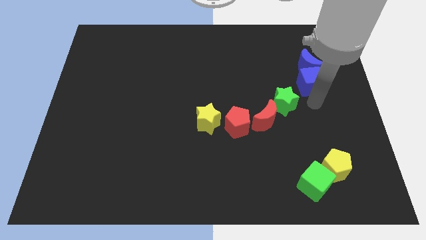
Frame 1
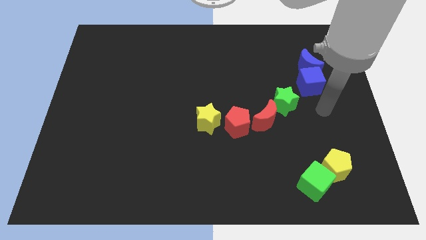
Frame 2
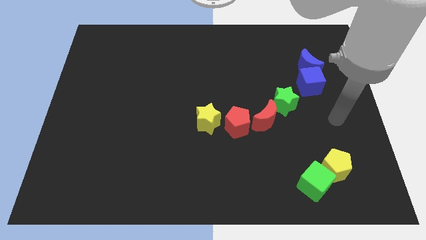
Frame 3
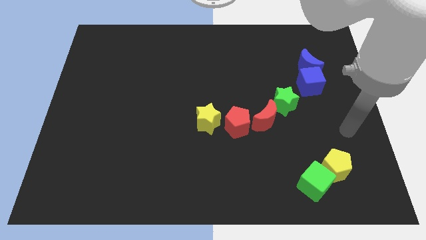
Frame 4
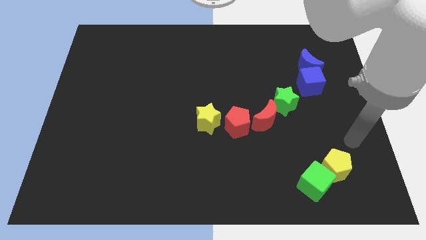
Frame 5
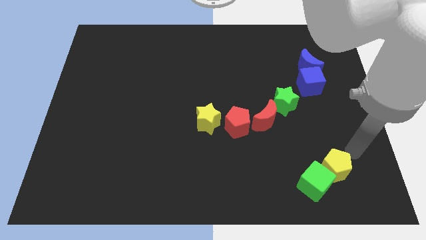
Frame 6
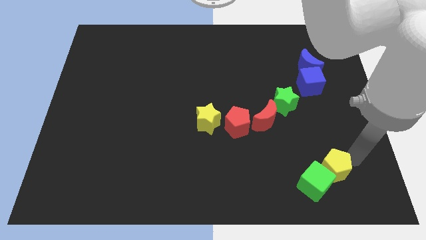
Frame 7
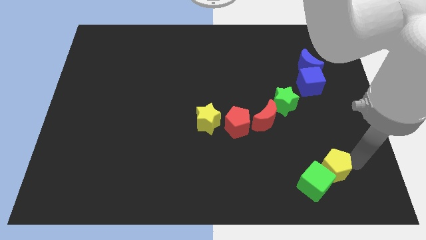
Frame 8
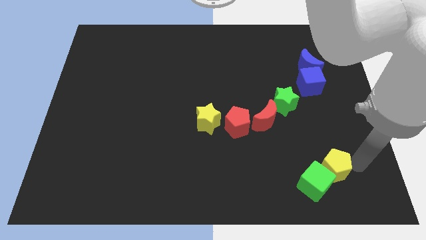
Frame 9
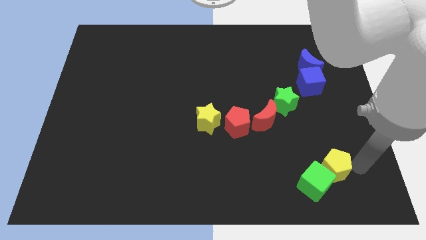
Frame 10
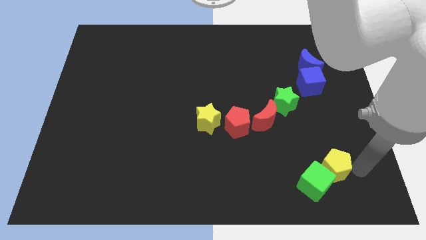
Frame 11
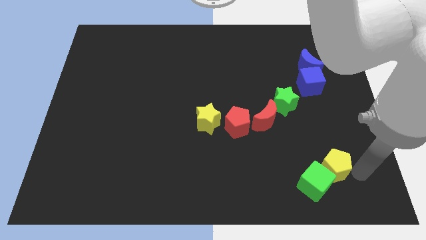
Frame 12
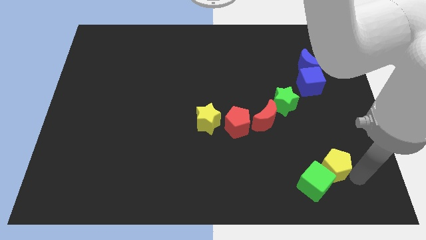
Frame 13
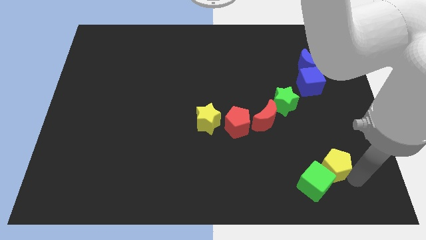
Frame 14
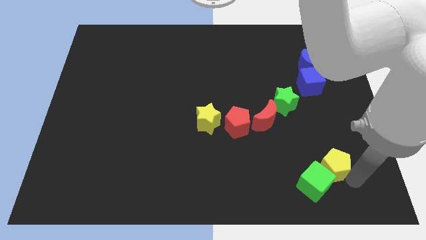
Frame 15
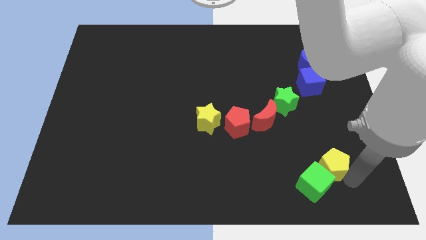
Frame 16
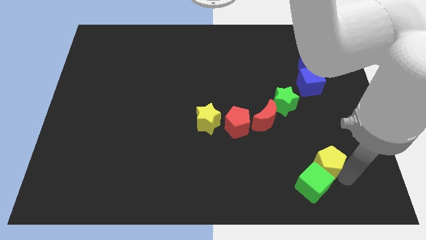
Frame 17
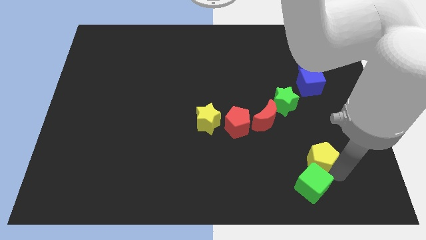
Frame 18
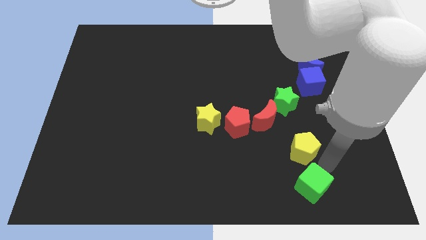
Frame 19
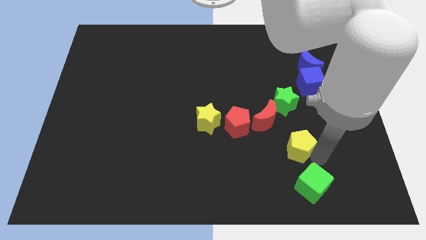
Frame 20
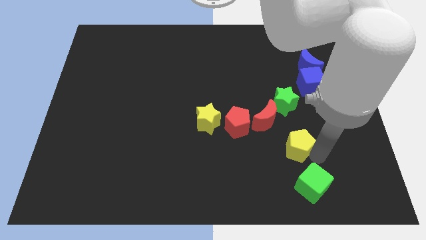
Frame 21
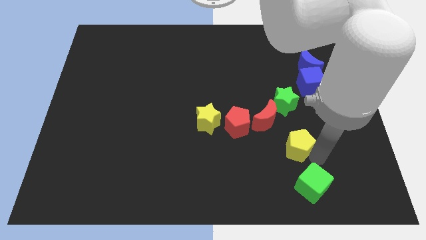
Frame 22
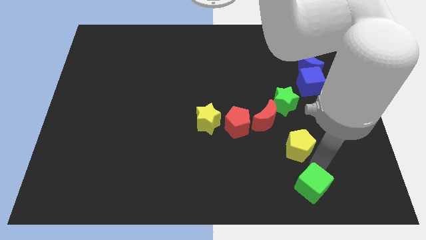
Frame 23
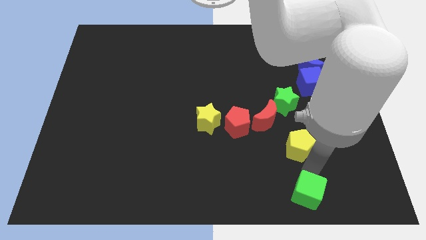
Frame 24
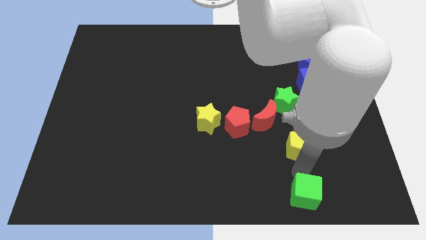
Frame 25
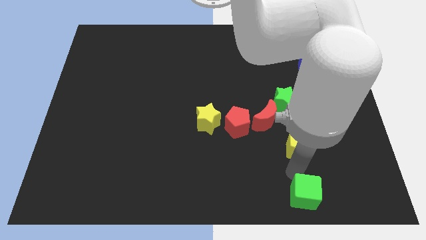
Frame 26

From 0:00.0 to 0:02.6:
separate yellow pentagon from green cube

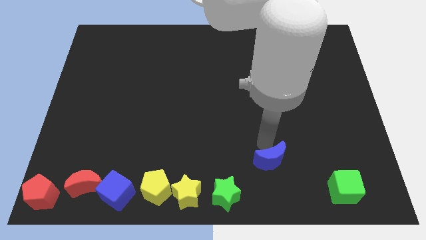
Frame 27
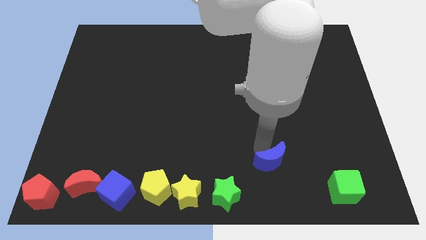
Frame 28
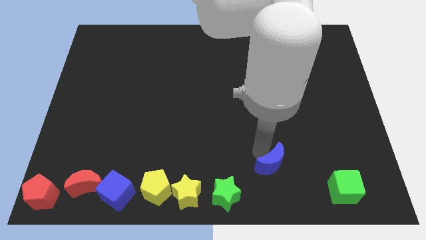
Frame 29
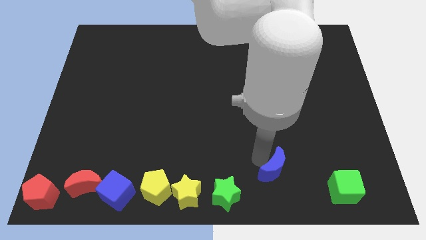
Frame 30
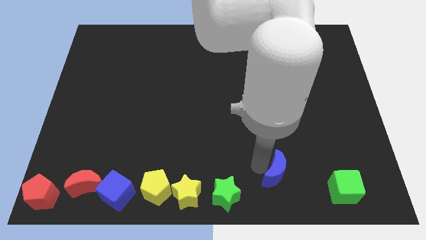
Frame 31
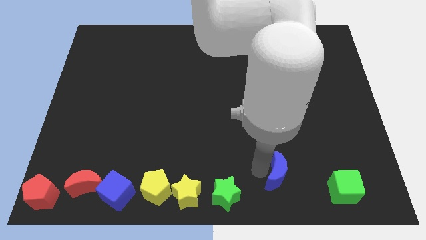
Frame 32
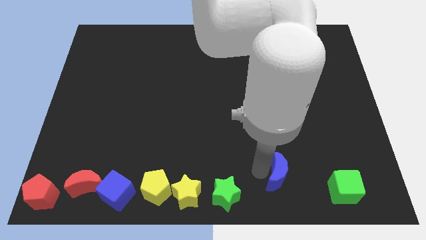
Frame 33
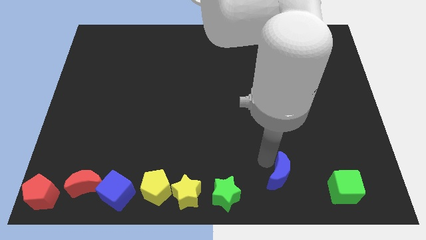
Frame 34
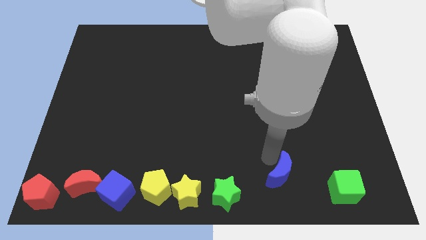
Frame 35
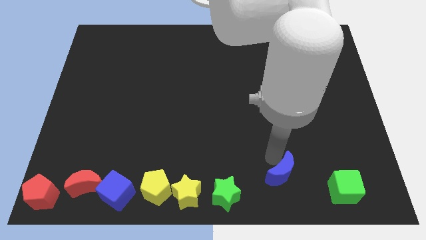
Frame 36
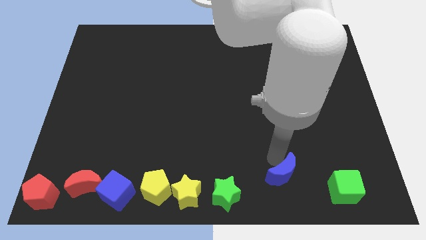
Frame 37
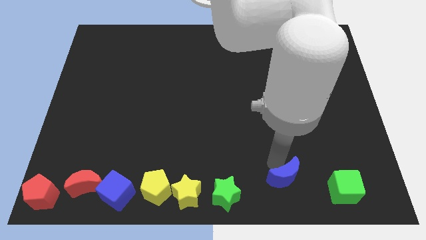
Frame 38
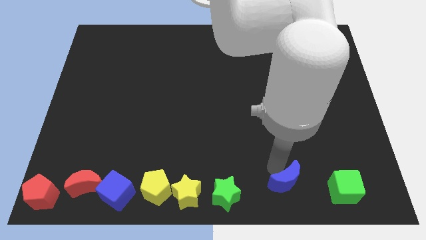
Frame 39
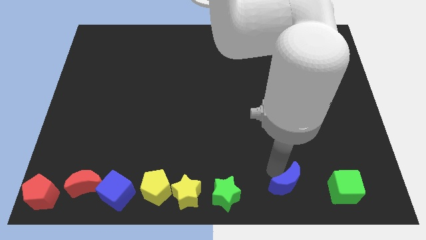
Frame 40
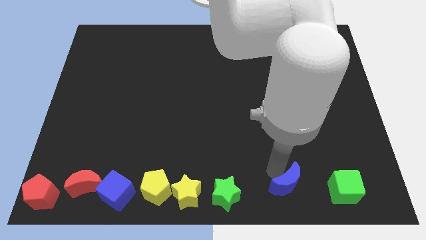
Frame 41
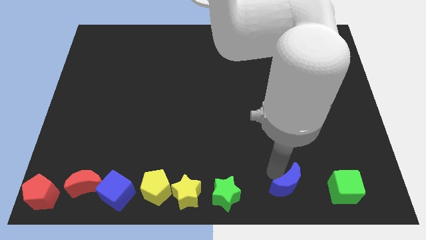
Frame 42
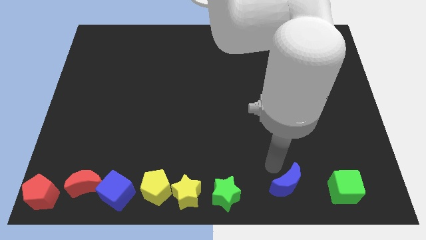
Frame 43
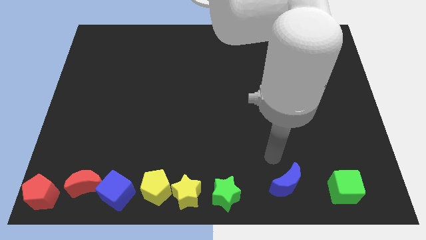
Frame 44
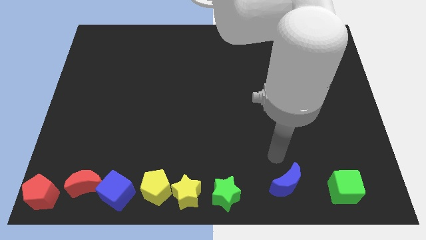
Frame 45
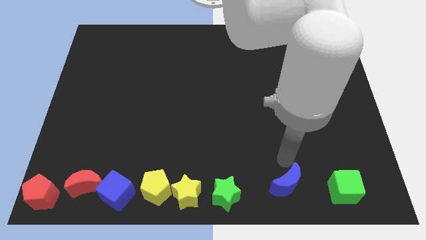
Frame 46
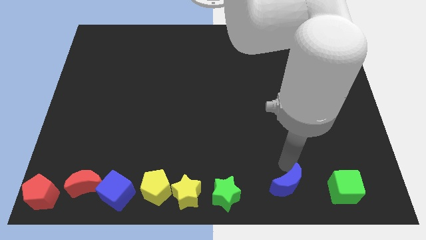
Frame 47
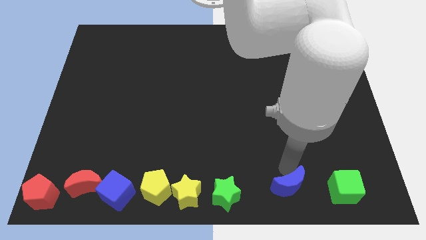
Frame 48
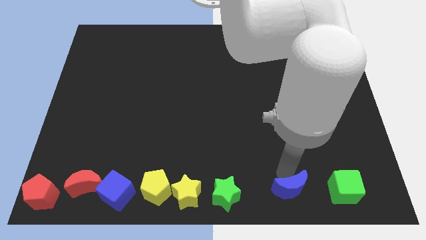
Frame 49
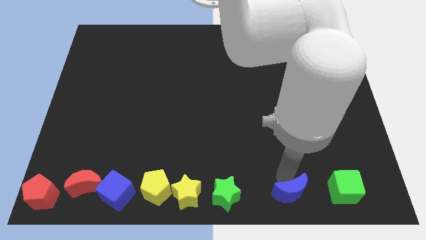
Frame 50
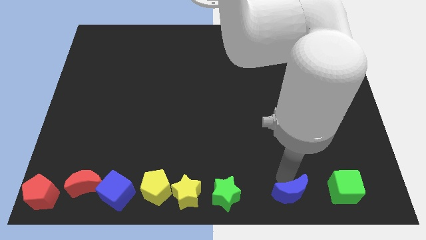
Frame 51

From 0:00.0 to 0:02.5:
place blue crescent beside green cube

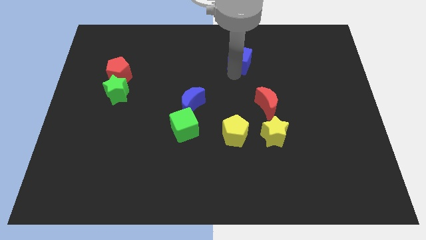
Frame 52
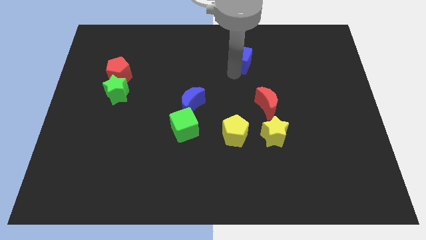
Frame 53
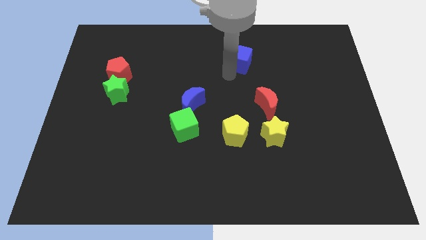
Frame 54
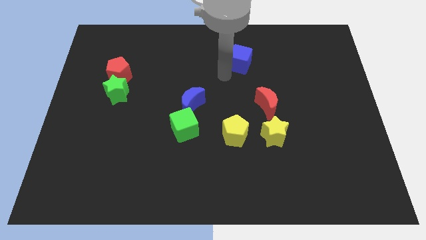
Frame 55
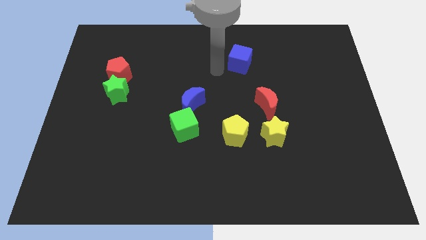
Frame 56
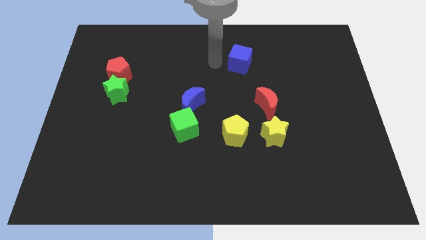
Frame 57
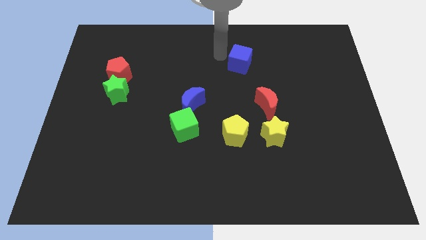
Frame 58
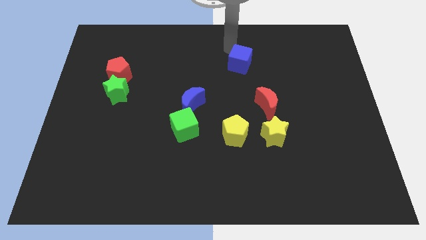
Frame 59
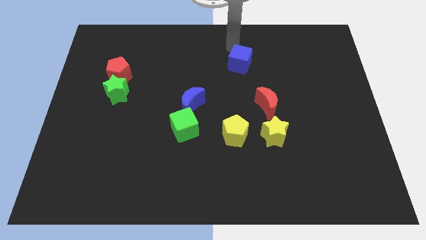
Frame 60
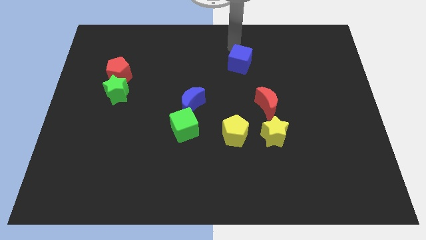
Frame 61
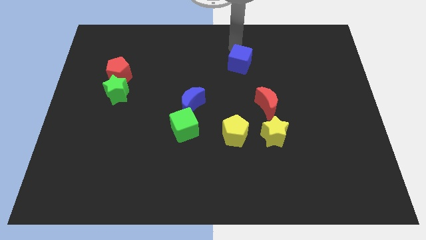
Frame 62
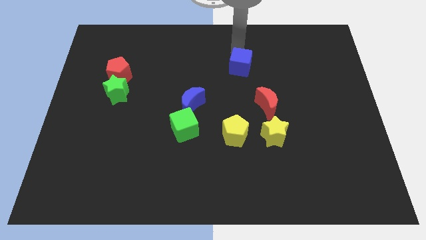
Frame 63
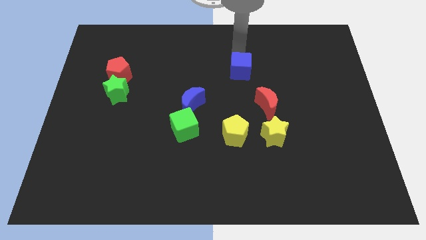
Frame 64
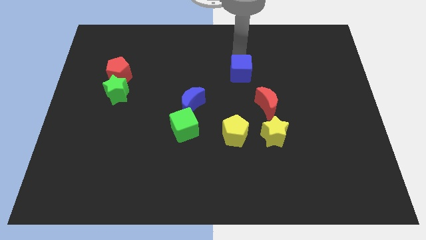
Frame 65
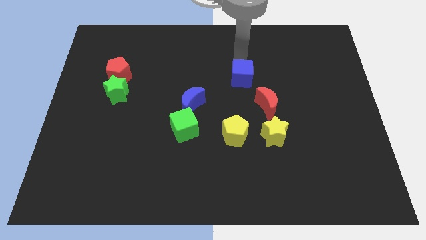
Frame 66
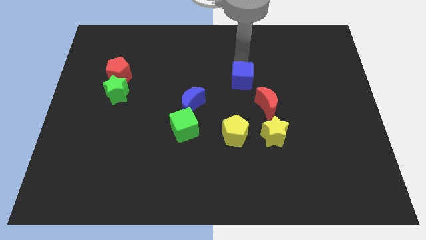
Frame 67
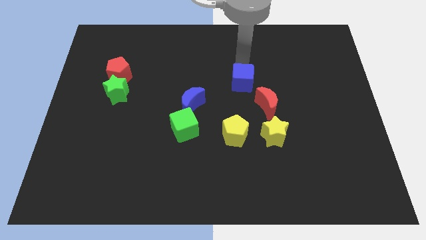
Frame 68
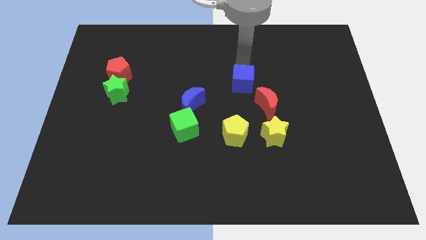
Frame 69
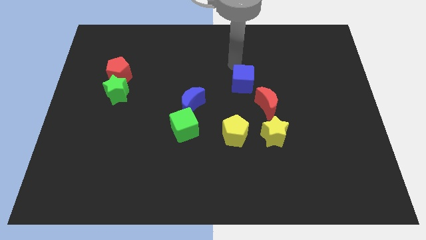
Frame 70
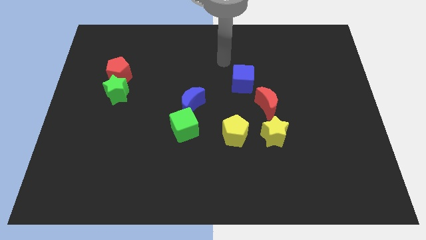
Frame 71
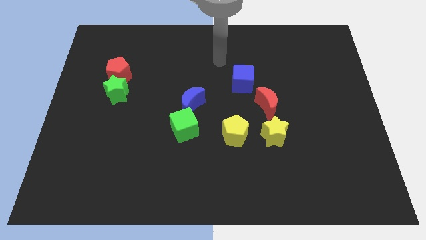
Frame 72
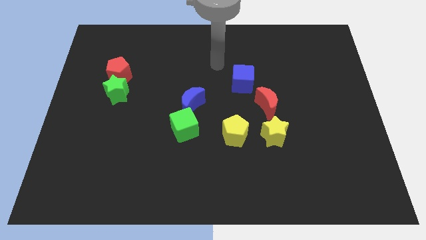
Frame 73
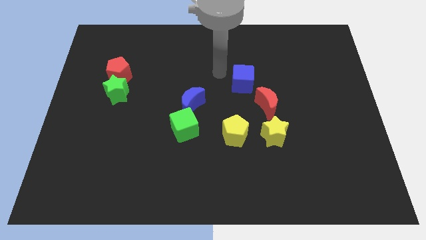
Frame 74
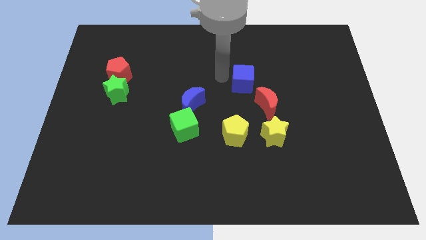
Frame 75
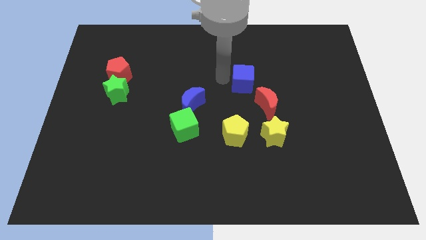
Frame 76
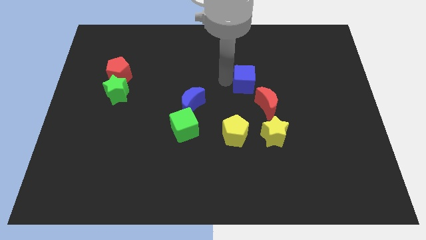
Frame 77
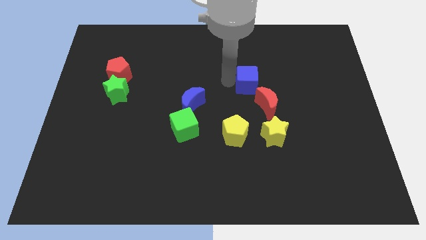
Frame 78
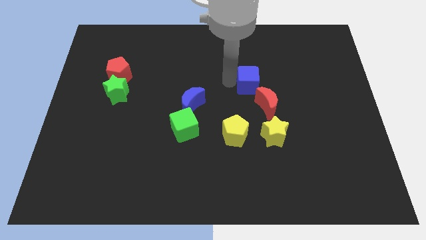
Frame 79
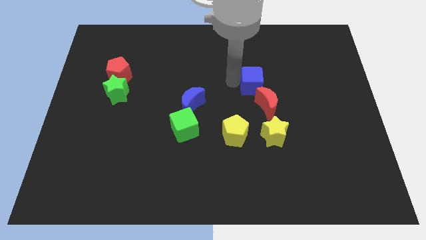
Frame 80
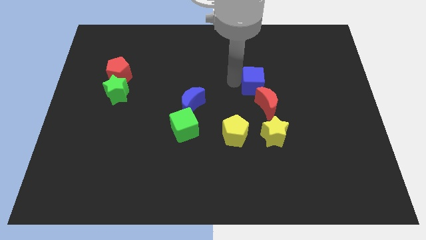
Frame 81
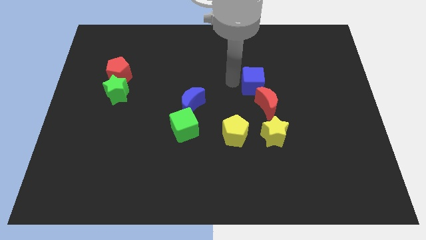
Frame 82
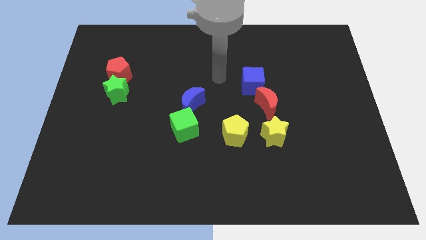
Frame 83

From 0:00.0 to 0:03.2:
put the blue cube at the top of red moon

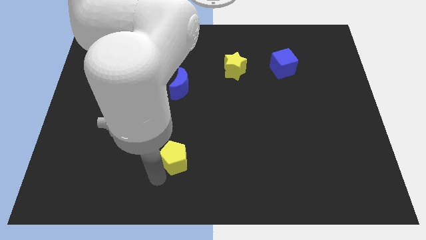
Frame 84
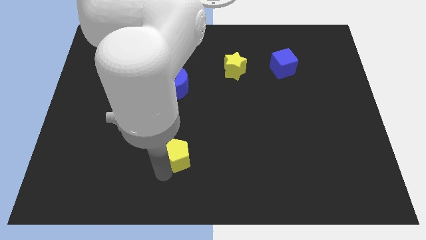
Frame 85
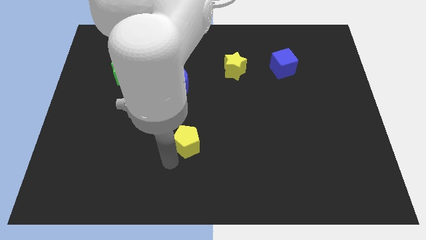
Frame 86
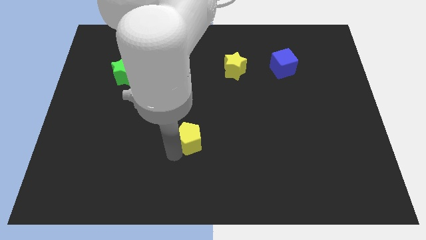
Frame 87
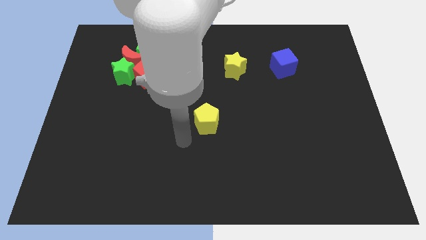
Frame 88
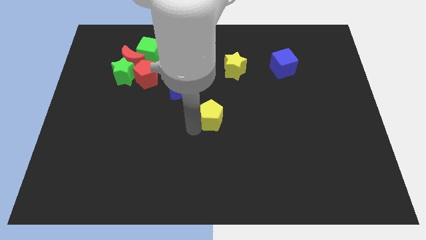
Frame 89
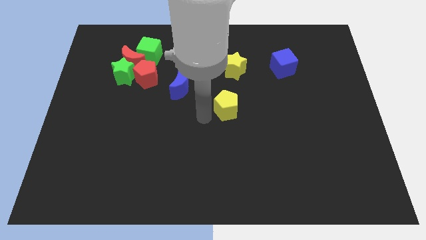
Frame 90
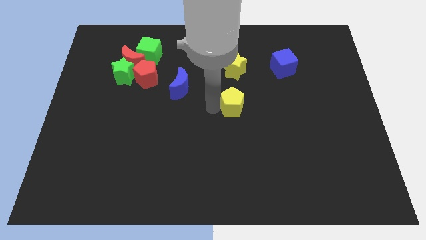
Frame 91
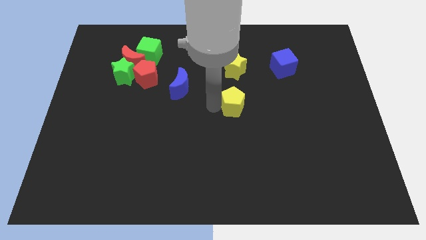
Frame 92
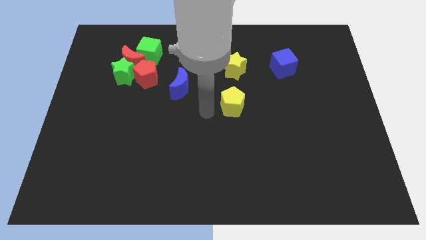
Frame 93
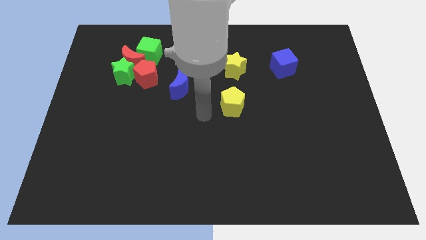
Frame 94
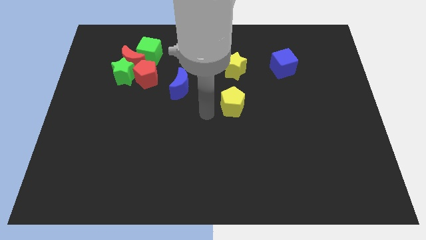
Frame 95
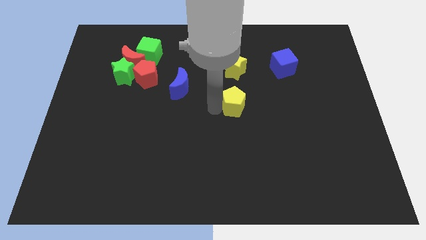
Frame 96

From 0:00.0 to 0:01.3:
place the yellow pentagon below the green star
